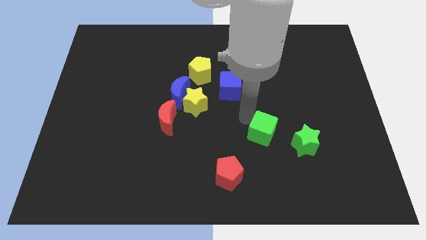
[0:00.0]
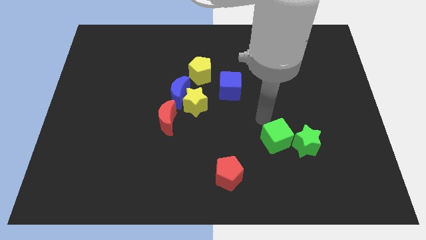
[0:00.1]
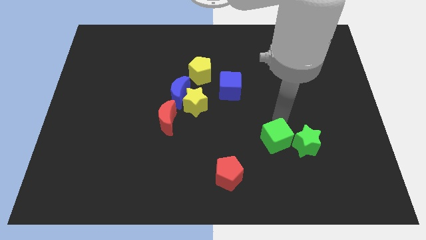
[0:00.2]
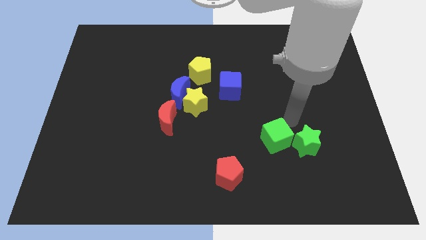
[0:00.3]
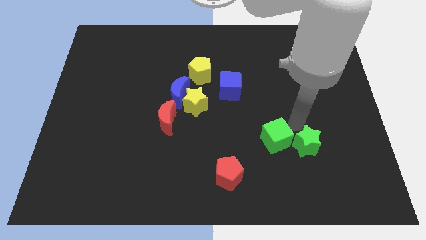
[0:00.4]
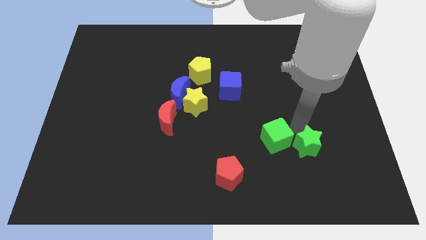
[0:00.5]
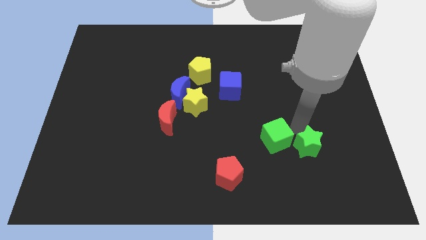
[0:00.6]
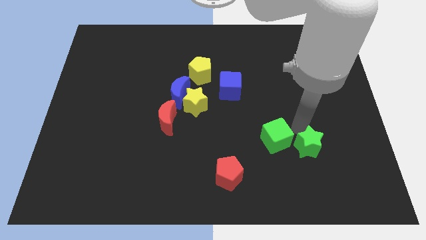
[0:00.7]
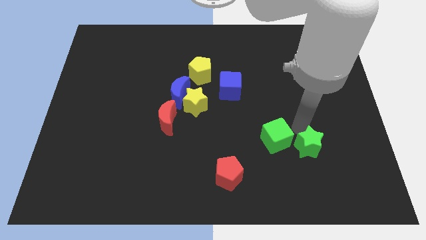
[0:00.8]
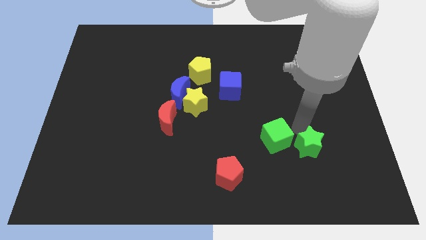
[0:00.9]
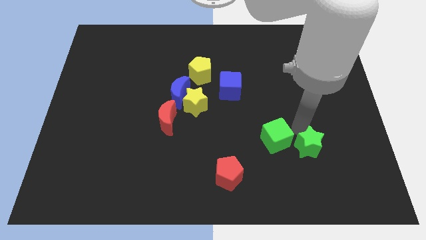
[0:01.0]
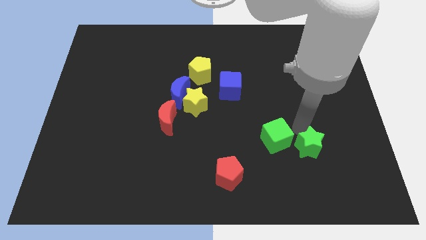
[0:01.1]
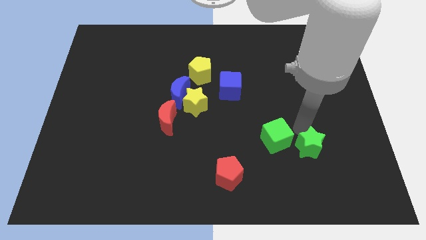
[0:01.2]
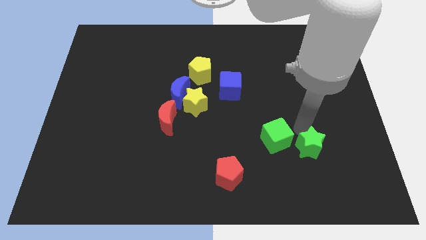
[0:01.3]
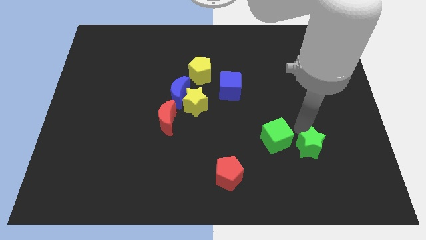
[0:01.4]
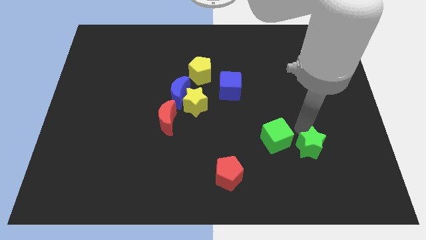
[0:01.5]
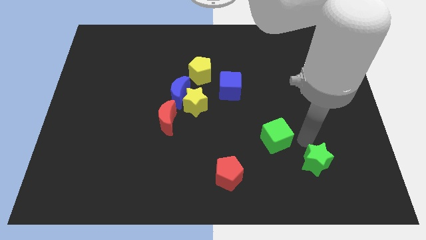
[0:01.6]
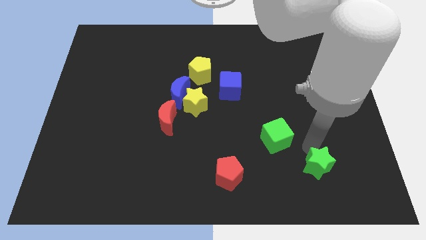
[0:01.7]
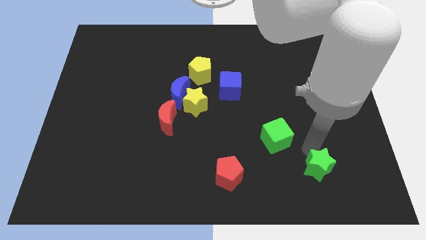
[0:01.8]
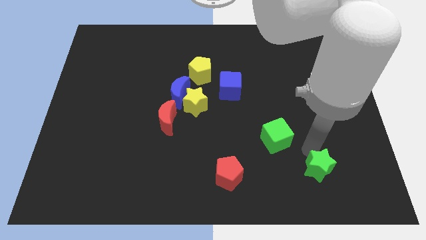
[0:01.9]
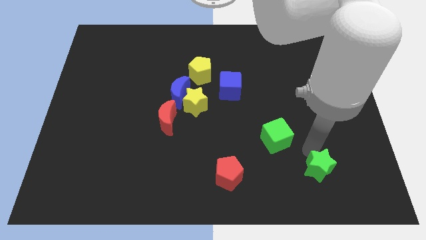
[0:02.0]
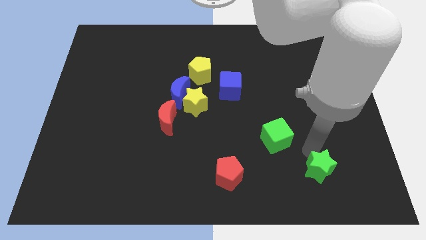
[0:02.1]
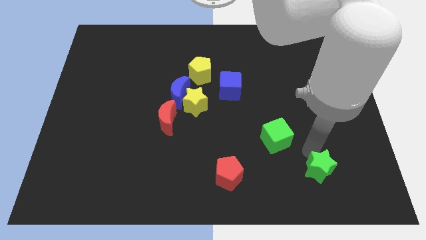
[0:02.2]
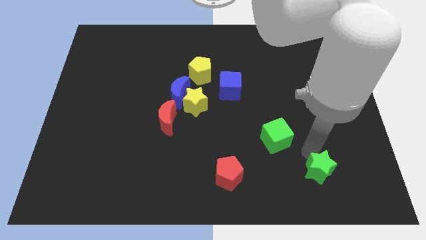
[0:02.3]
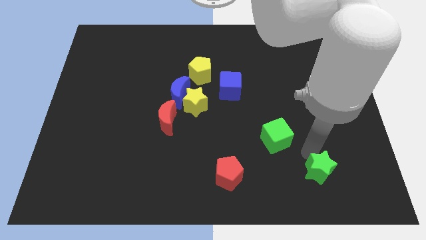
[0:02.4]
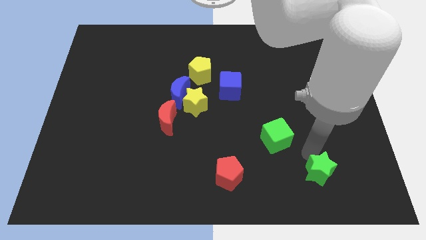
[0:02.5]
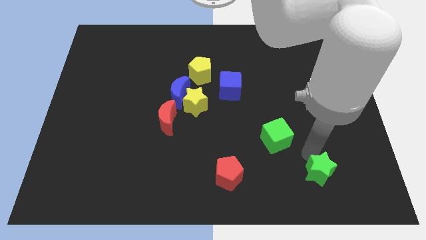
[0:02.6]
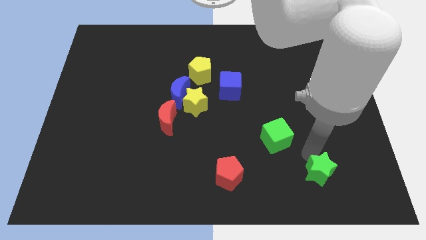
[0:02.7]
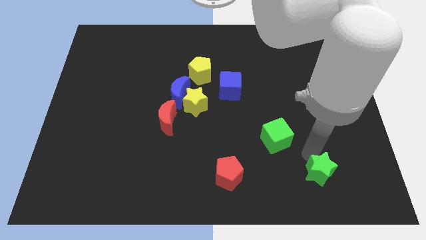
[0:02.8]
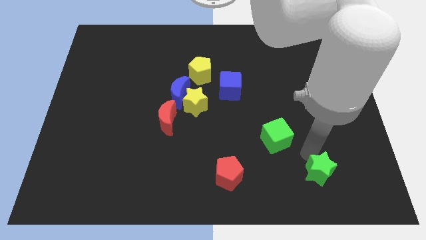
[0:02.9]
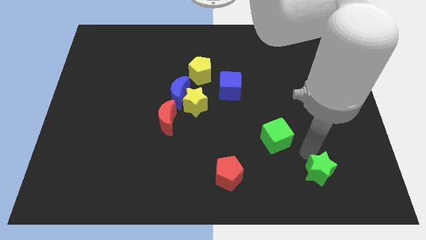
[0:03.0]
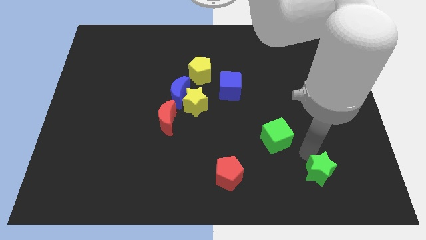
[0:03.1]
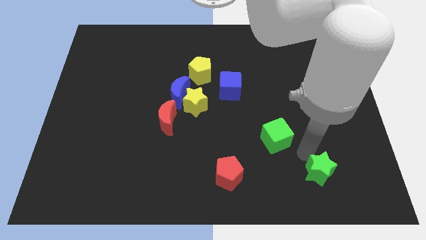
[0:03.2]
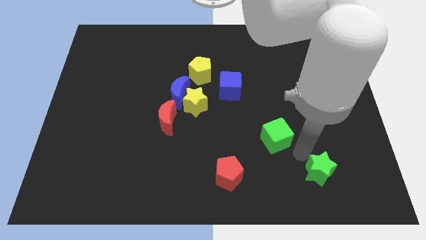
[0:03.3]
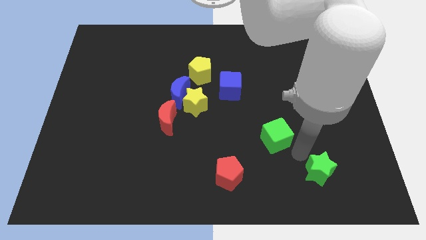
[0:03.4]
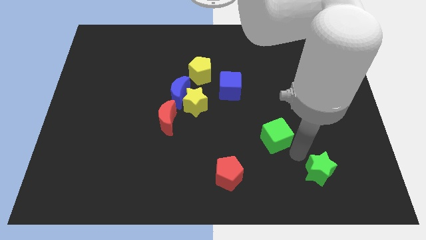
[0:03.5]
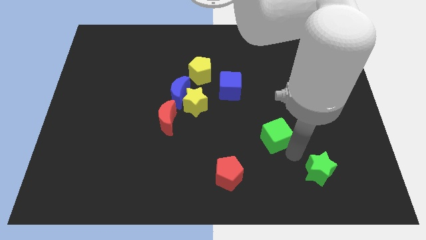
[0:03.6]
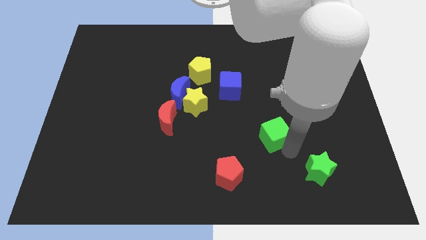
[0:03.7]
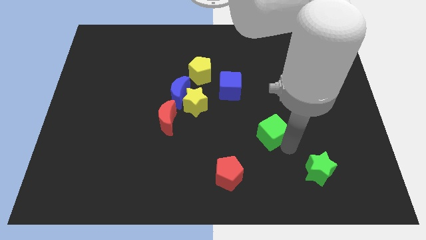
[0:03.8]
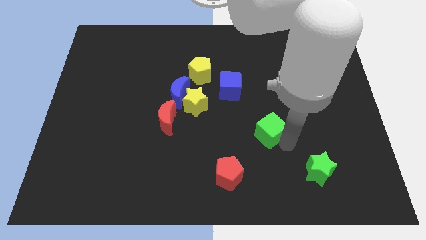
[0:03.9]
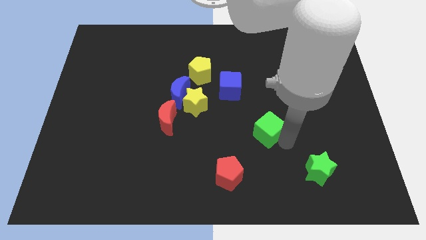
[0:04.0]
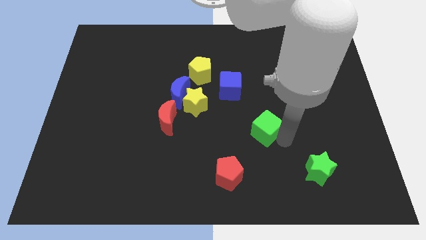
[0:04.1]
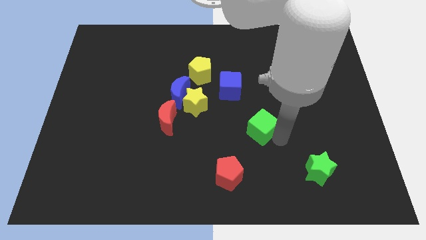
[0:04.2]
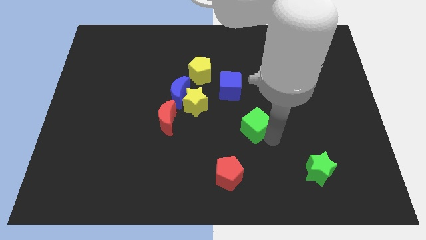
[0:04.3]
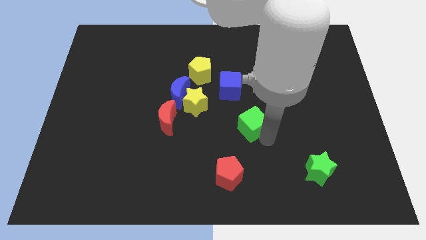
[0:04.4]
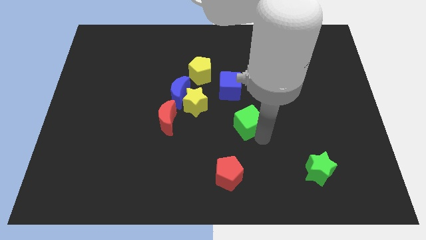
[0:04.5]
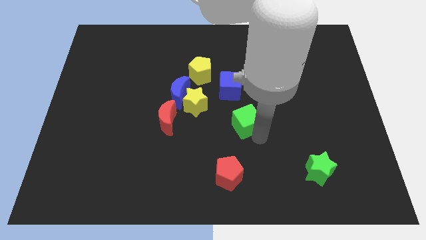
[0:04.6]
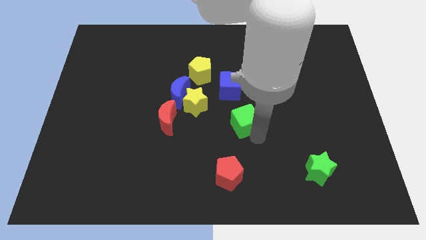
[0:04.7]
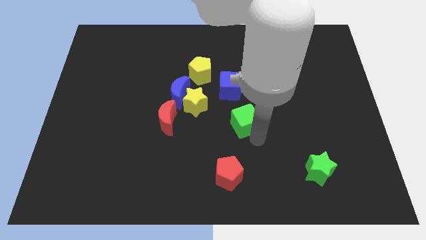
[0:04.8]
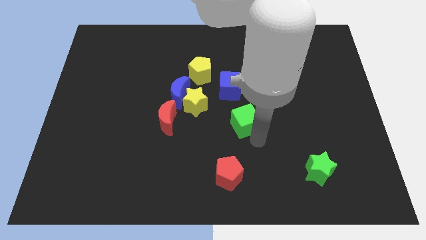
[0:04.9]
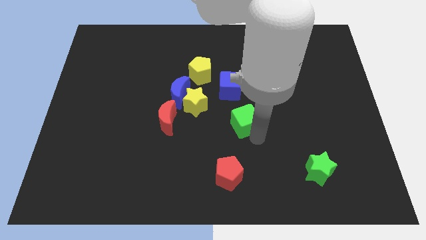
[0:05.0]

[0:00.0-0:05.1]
separate the green blocks from each other

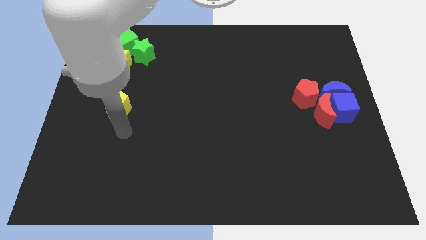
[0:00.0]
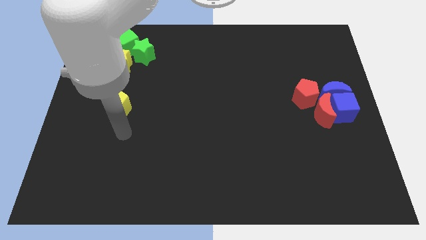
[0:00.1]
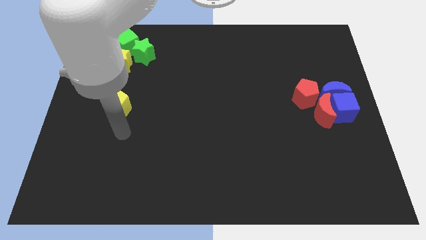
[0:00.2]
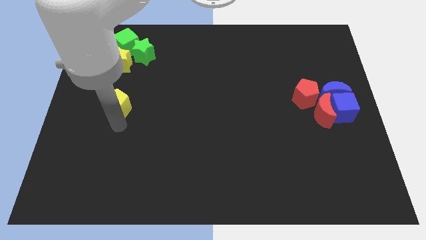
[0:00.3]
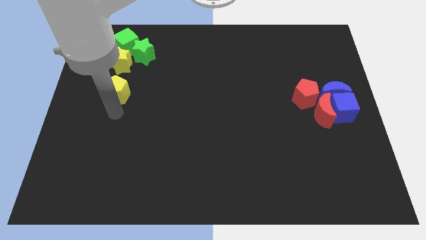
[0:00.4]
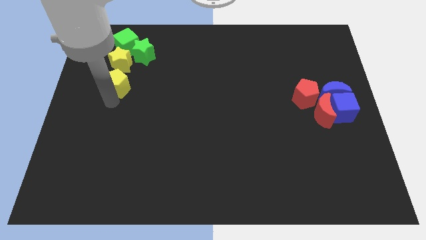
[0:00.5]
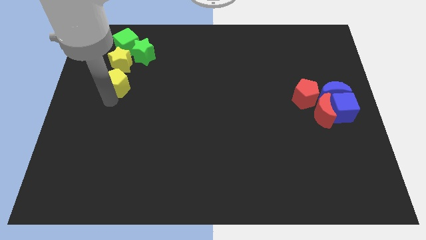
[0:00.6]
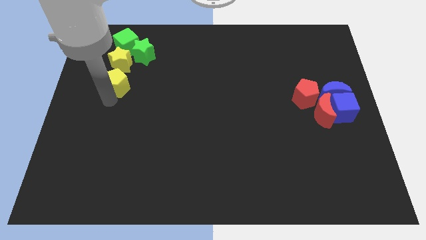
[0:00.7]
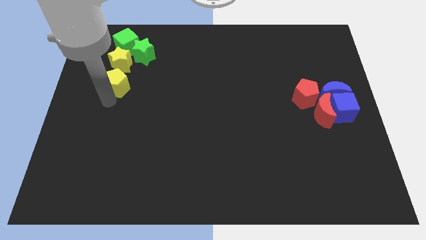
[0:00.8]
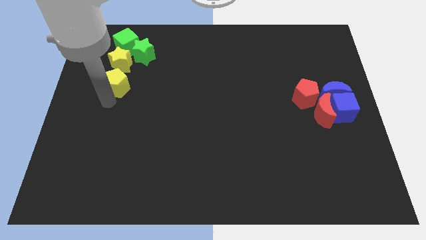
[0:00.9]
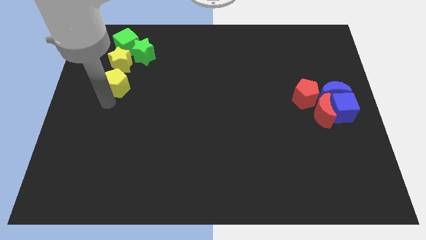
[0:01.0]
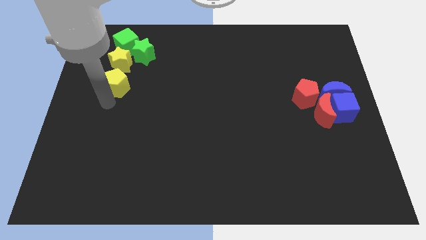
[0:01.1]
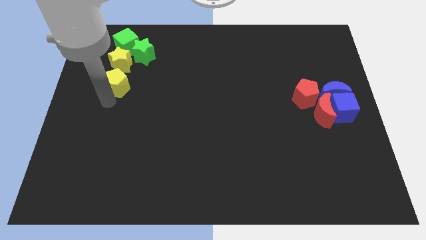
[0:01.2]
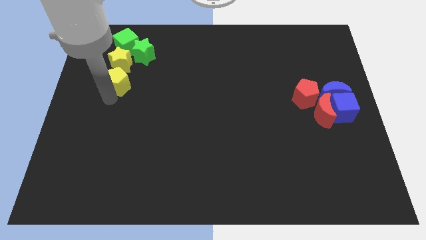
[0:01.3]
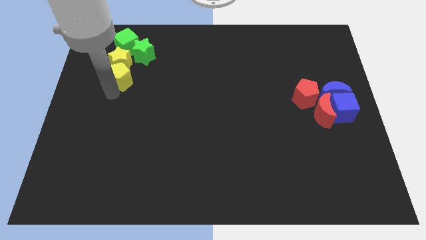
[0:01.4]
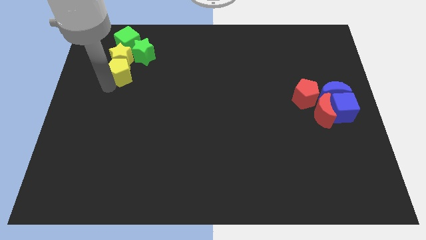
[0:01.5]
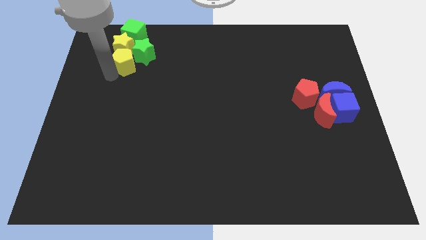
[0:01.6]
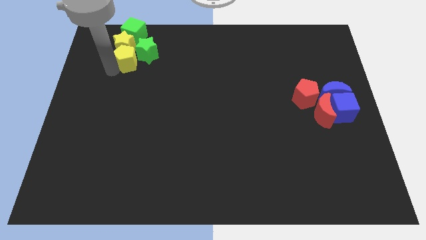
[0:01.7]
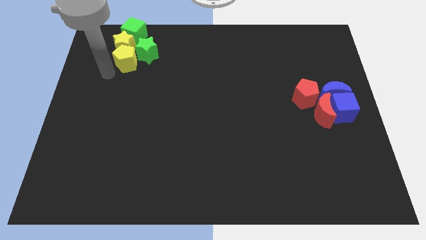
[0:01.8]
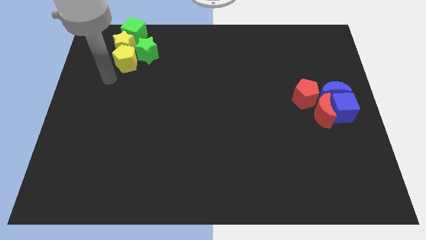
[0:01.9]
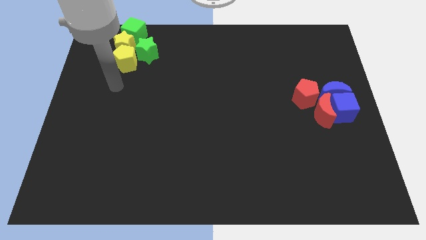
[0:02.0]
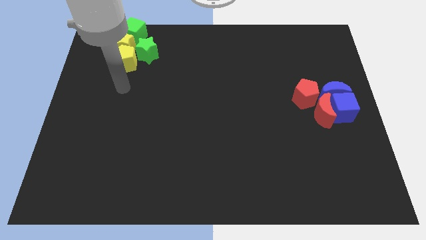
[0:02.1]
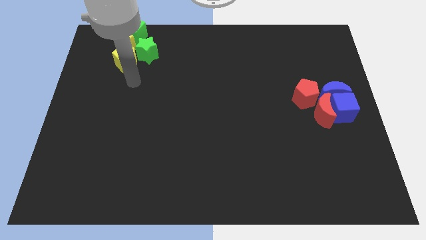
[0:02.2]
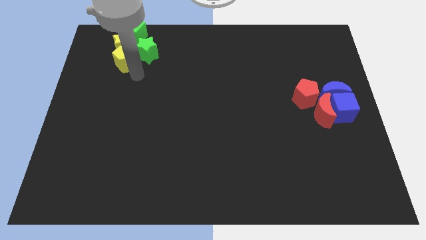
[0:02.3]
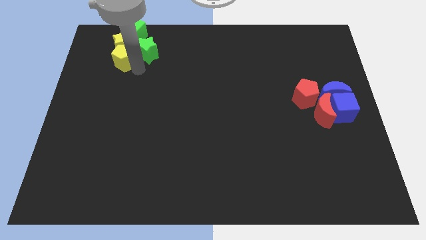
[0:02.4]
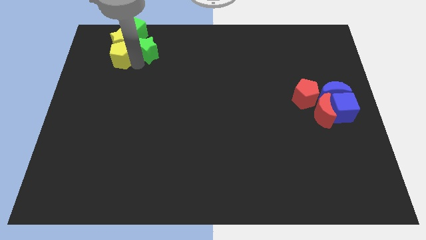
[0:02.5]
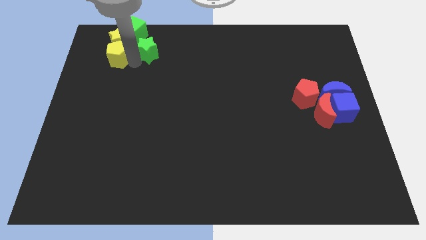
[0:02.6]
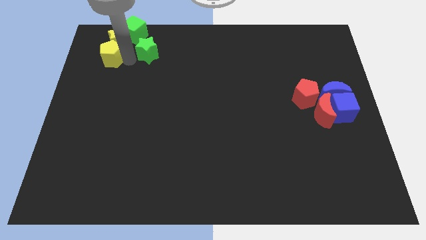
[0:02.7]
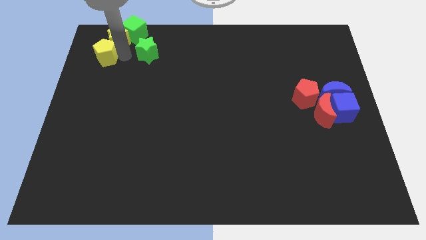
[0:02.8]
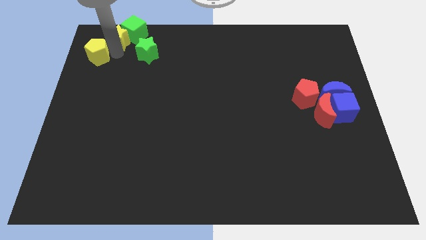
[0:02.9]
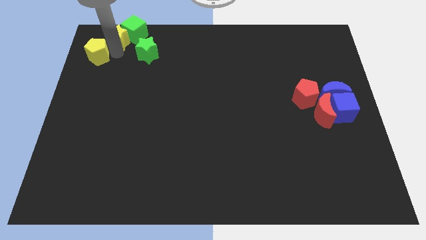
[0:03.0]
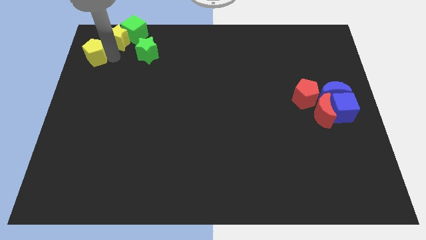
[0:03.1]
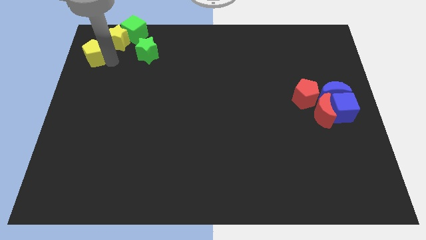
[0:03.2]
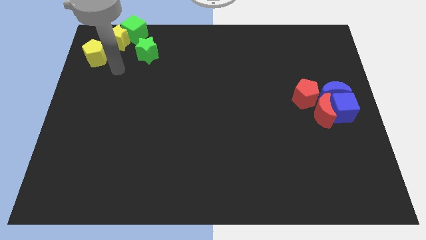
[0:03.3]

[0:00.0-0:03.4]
move the yellow pentagon into the yellow star

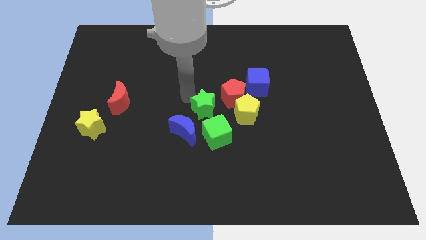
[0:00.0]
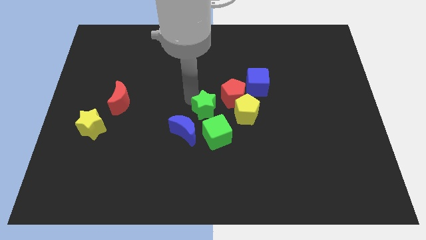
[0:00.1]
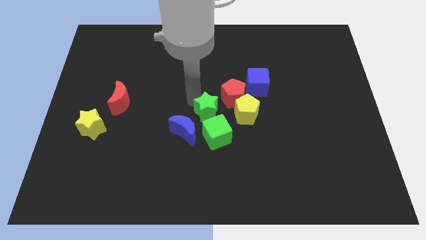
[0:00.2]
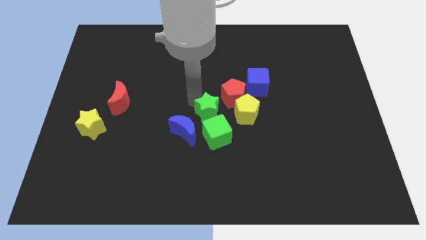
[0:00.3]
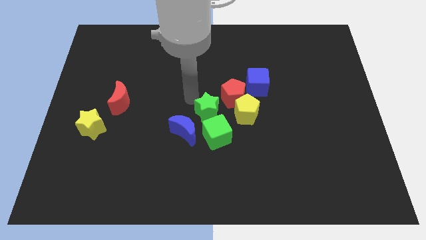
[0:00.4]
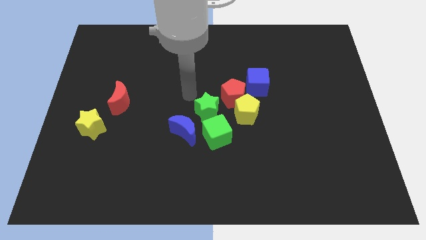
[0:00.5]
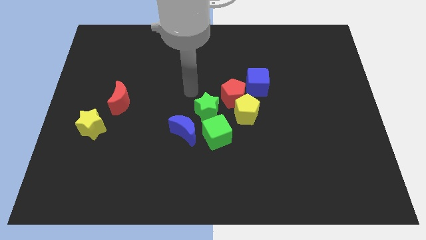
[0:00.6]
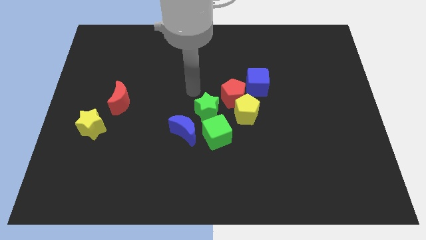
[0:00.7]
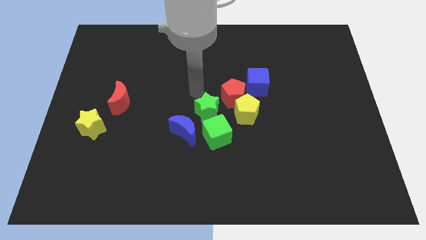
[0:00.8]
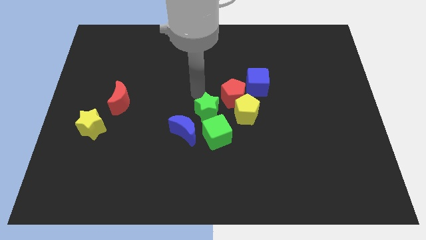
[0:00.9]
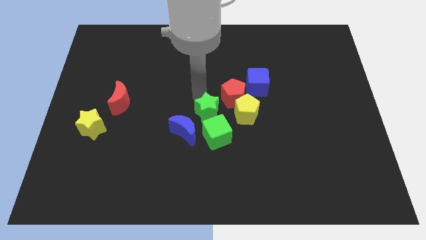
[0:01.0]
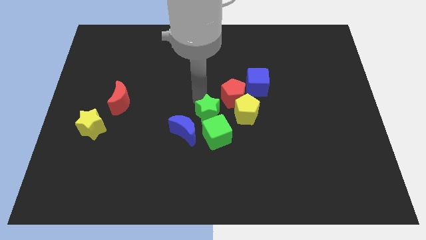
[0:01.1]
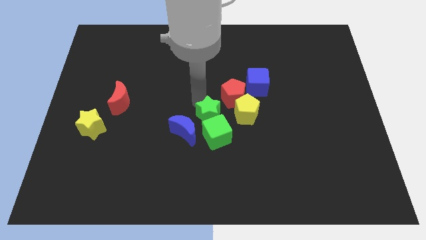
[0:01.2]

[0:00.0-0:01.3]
move the green star into the green cube
